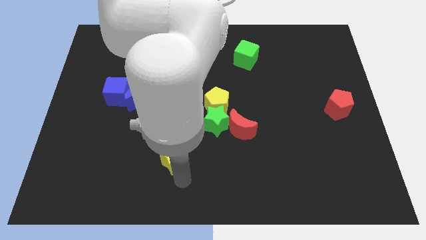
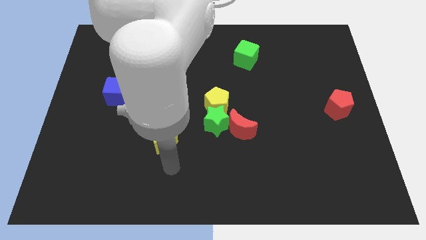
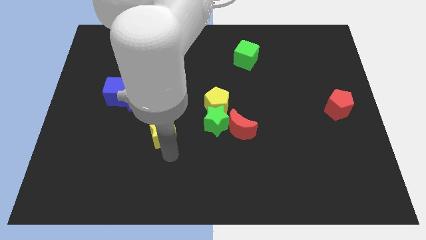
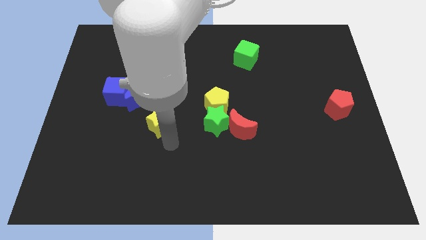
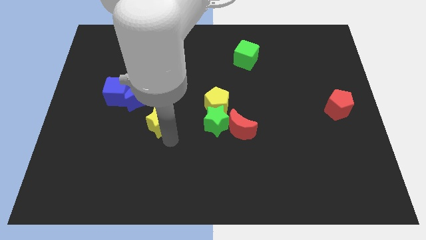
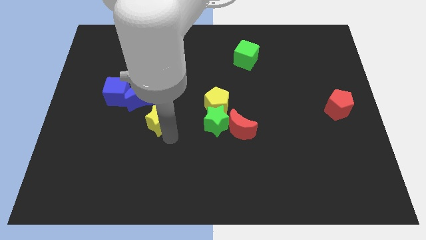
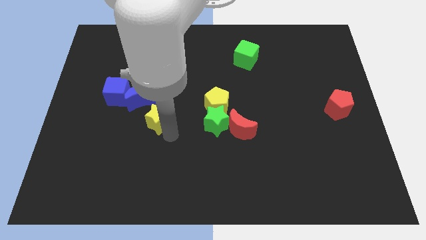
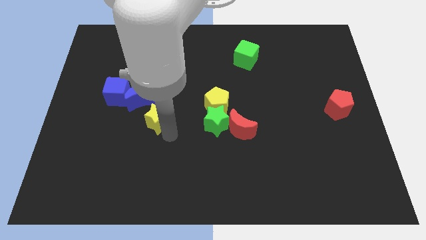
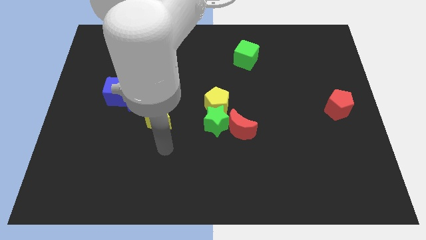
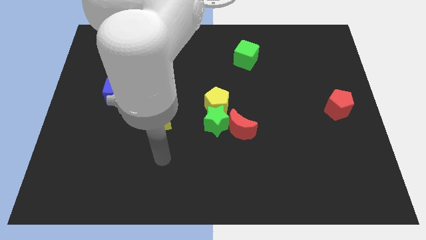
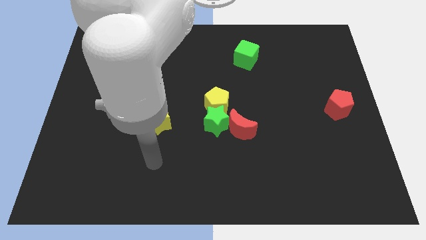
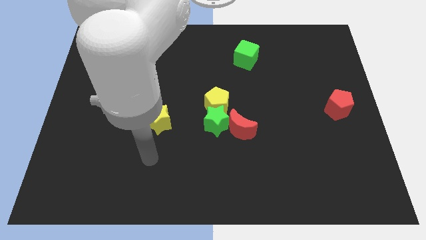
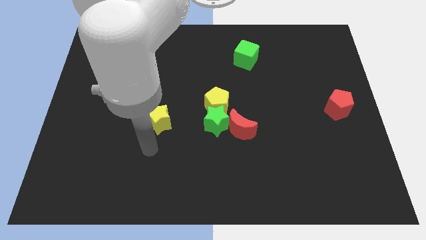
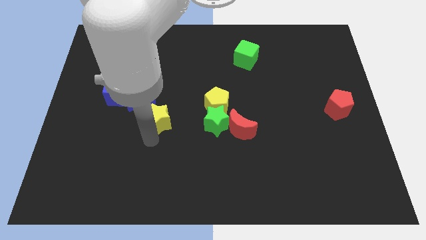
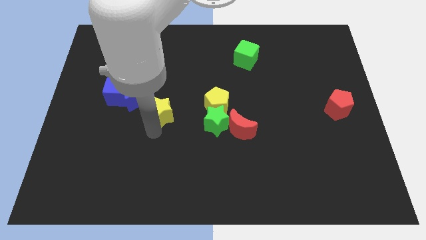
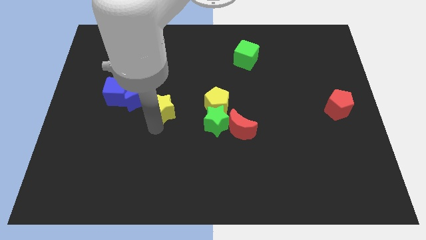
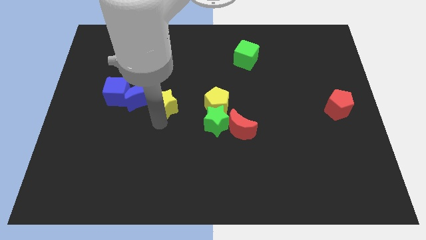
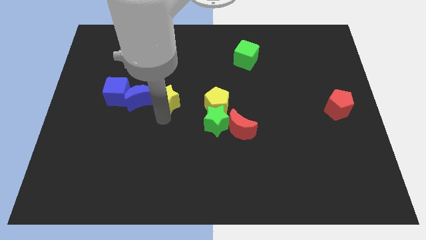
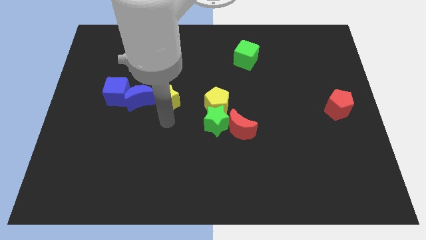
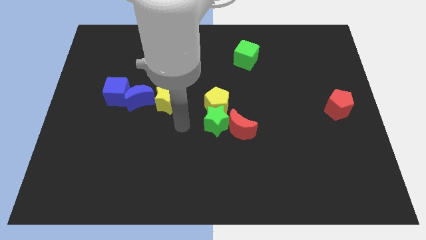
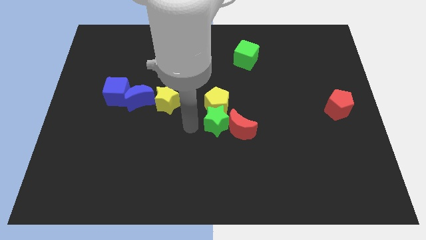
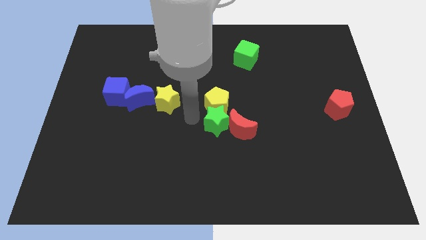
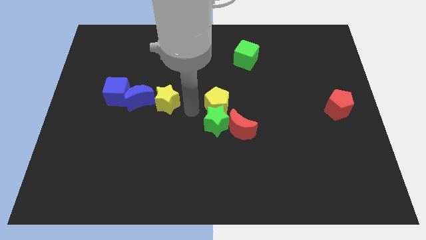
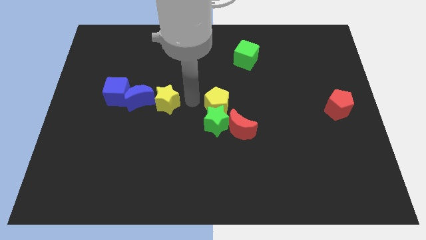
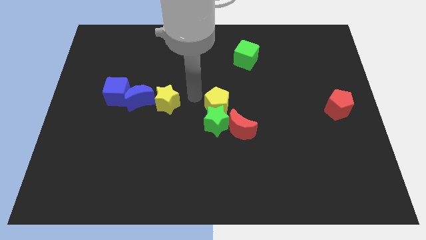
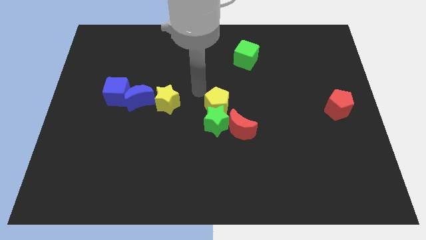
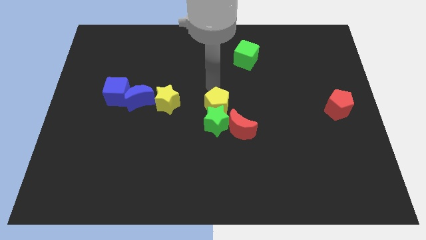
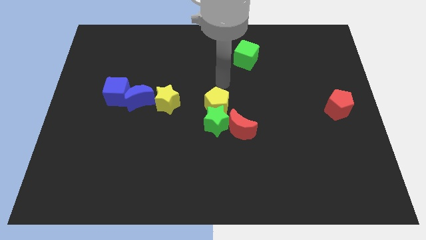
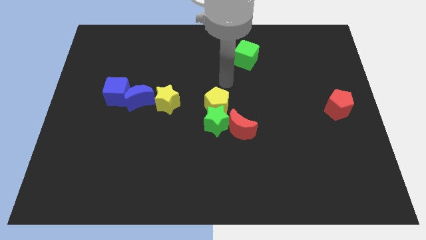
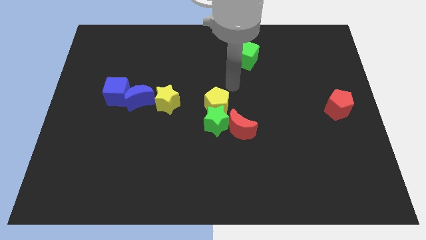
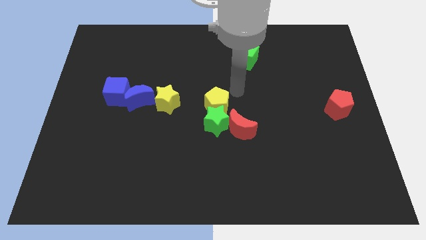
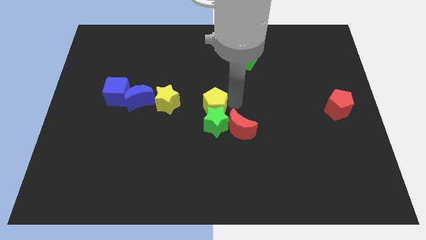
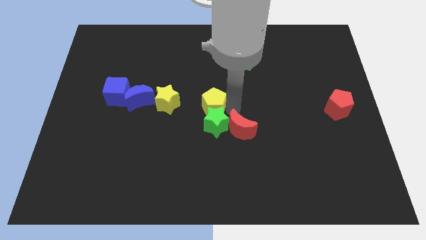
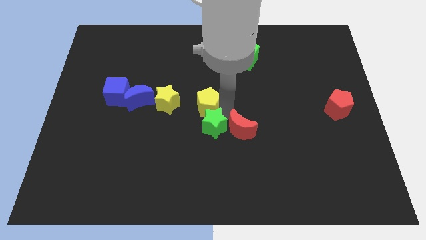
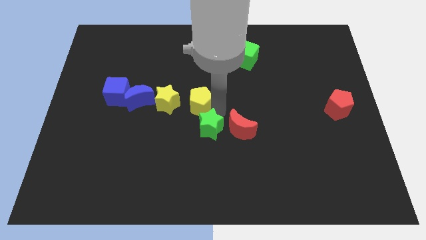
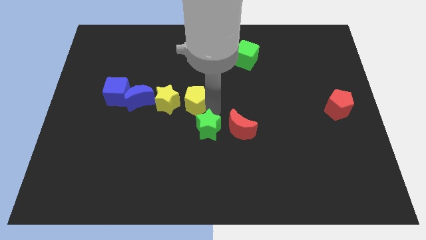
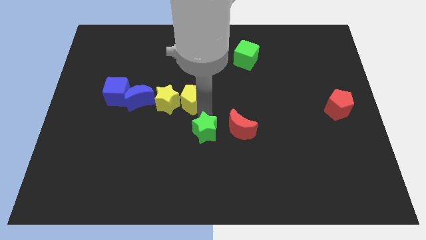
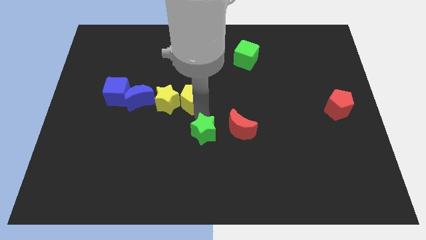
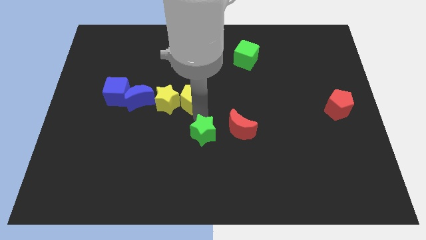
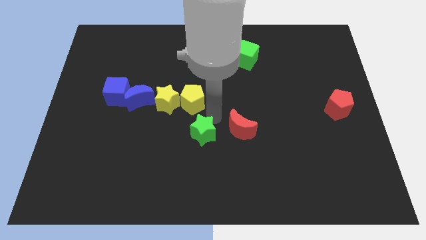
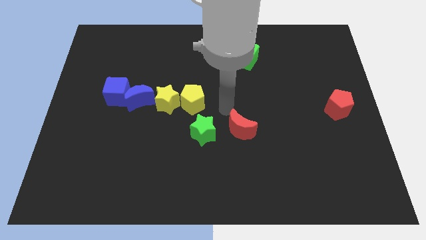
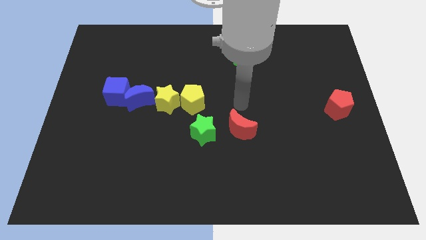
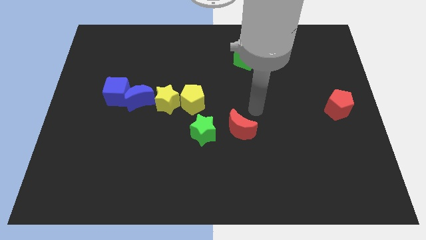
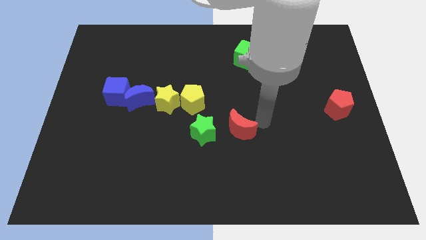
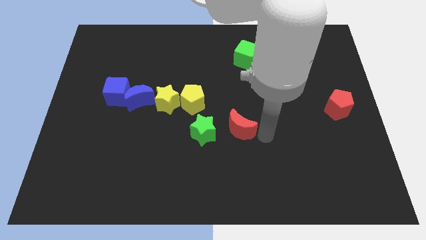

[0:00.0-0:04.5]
slide the yellow pentagon to the right side of the yellow star

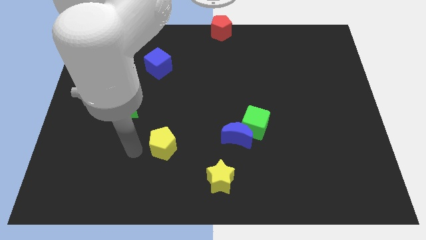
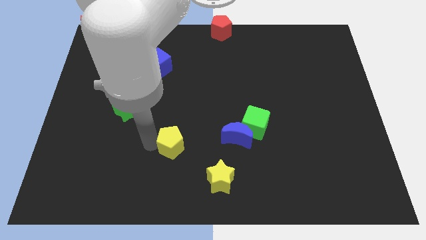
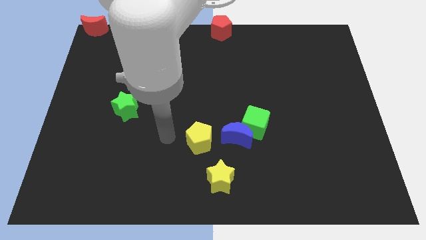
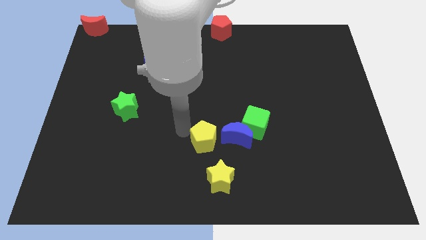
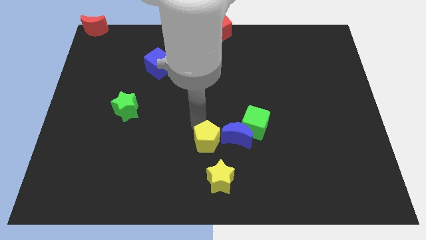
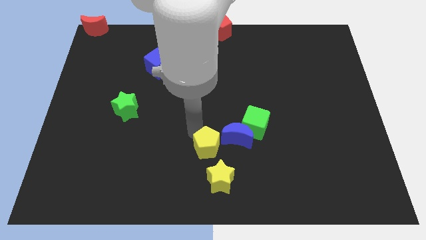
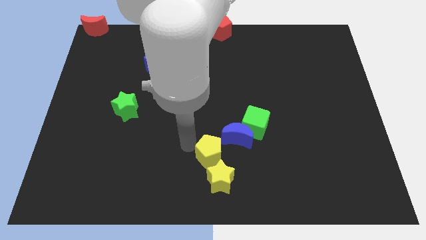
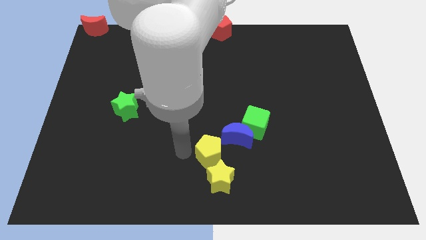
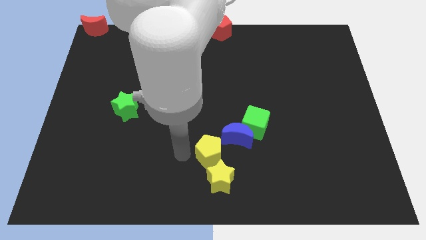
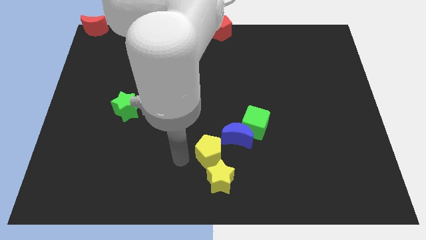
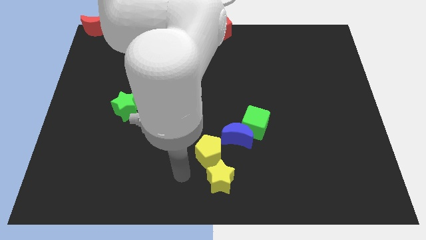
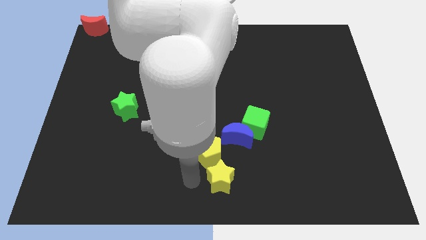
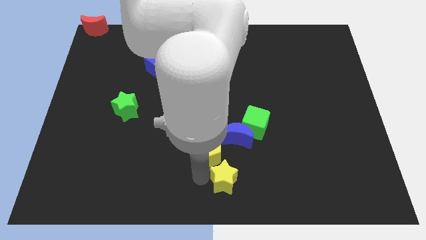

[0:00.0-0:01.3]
move the yellow pentagon above the yellow star

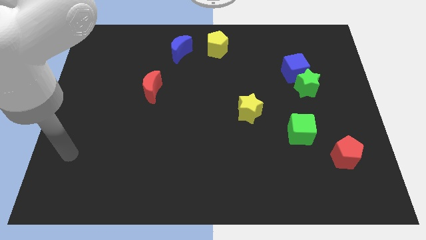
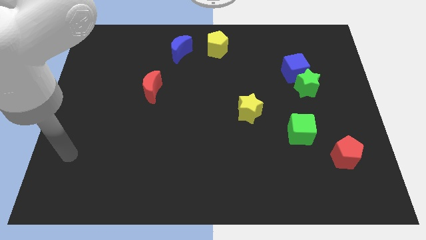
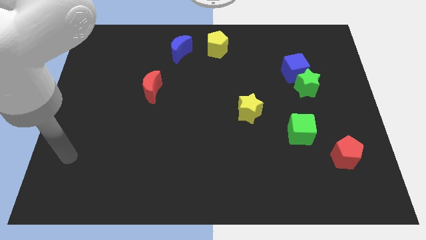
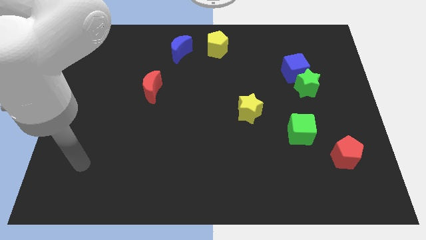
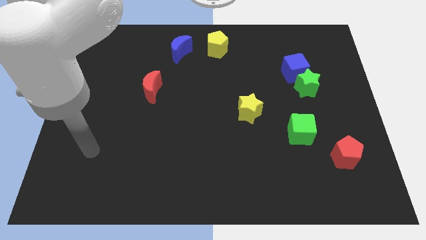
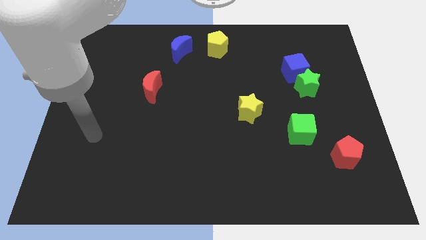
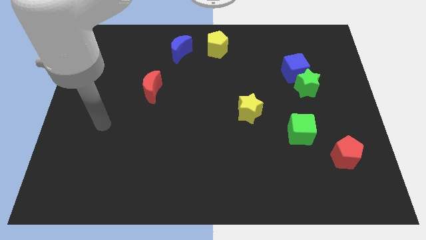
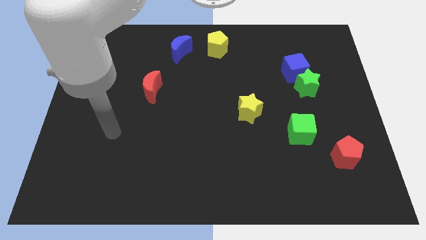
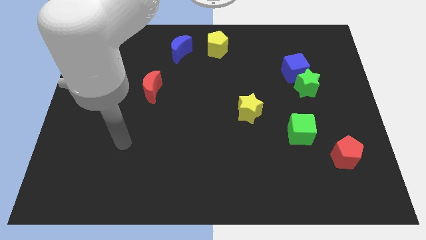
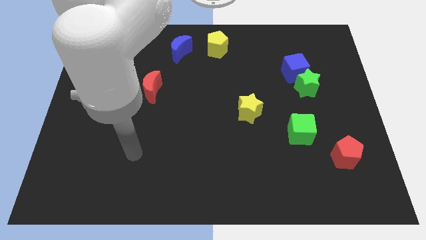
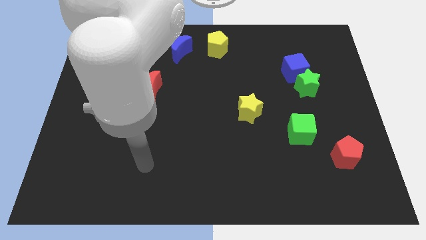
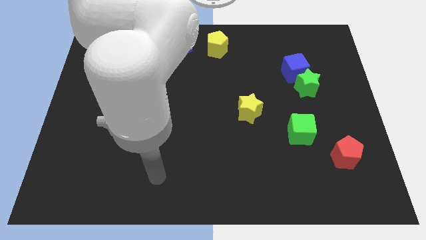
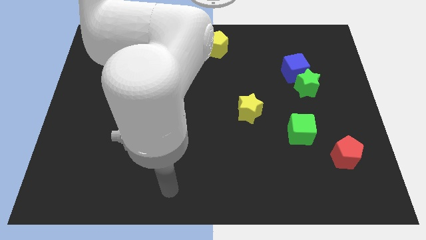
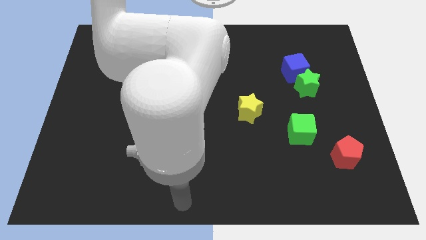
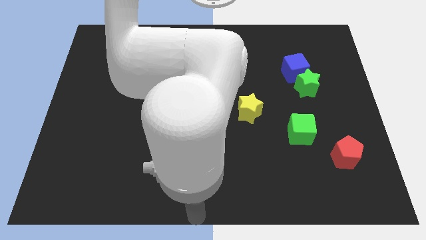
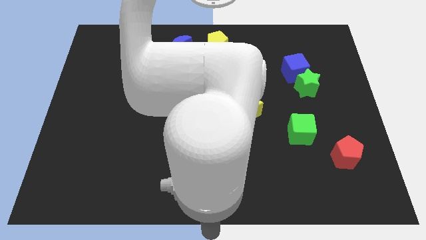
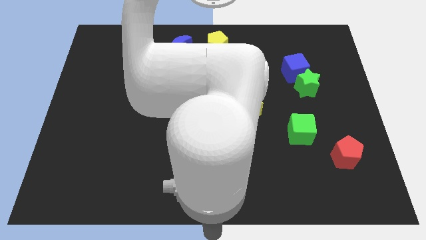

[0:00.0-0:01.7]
place your arm at the bottom center of the board

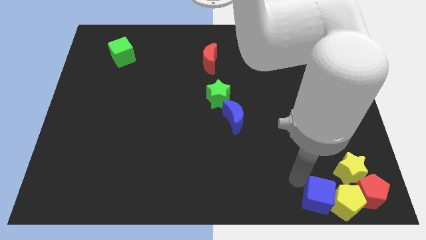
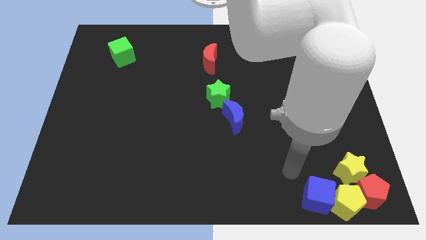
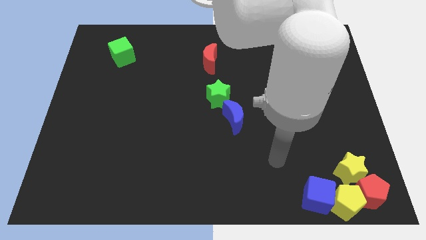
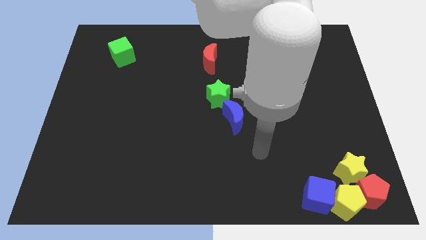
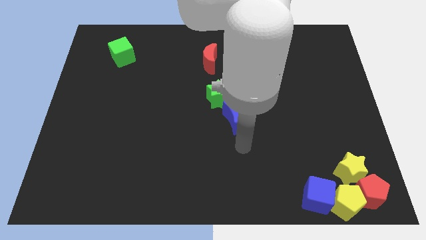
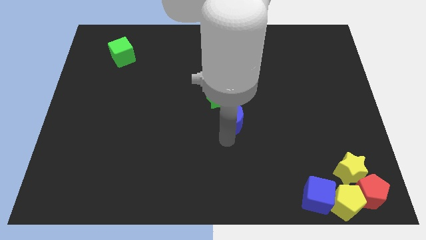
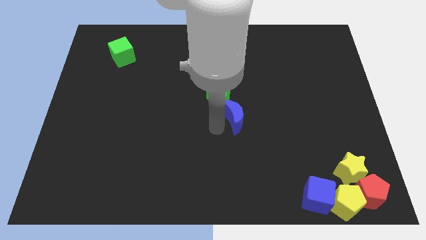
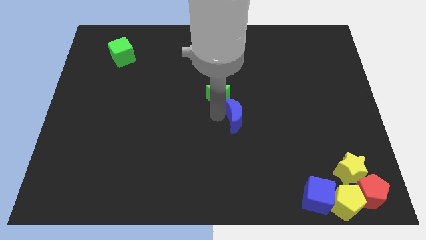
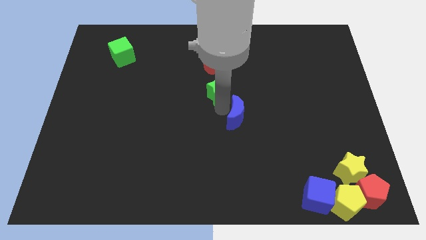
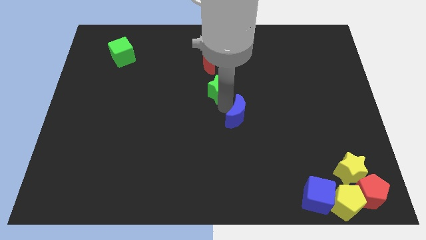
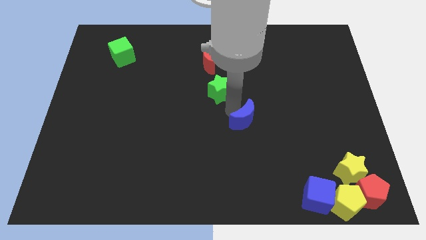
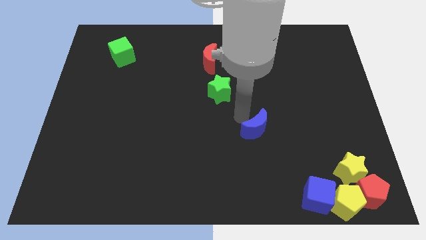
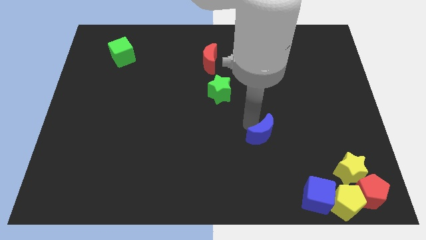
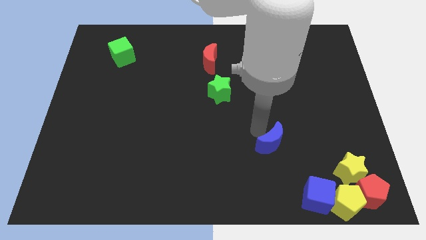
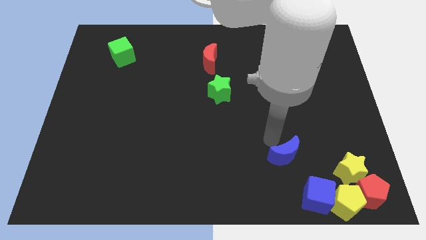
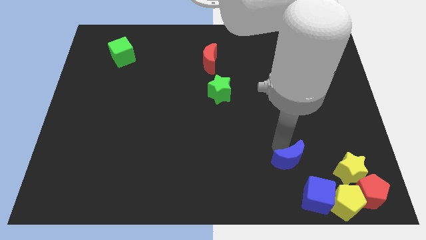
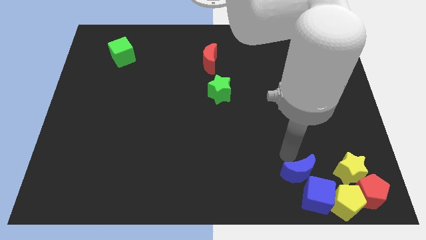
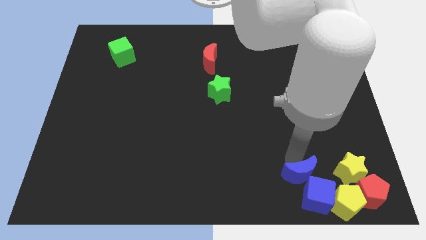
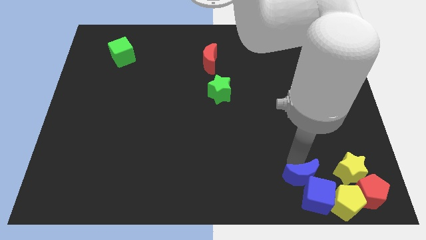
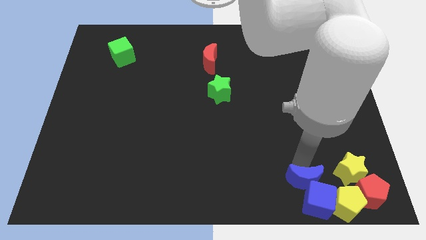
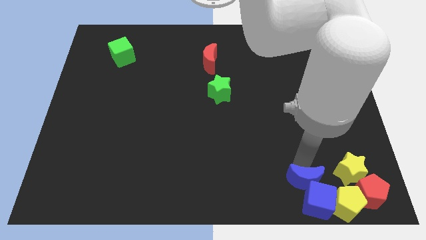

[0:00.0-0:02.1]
move the blue semi circle away from the green star
